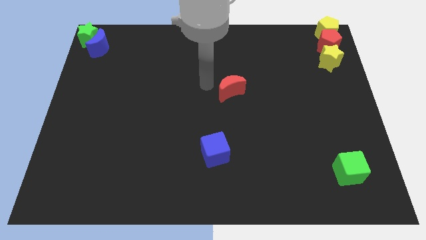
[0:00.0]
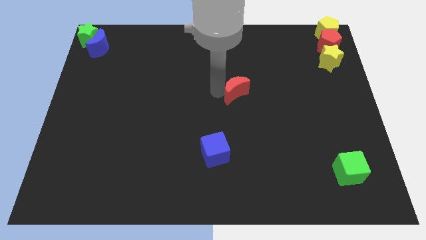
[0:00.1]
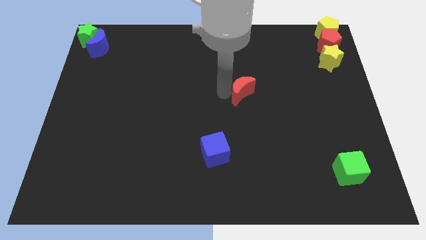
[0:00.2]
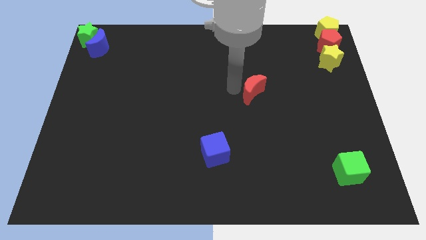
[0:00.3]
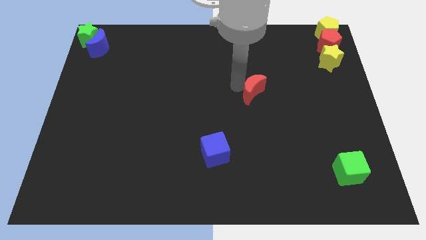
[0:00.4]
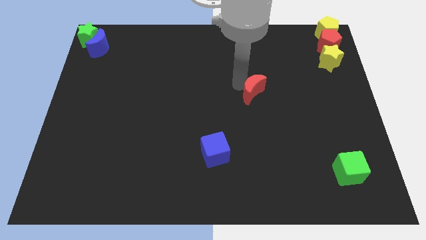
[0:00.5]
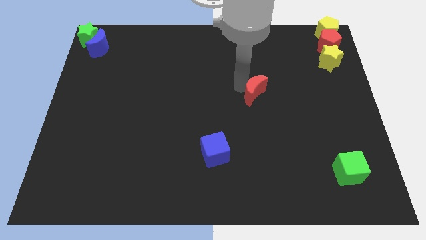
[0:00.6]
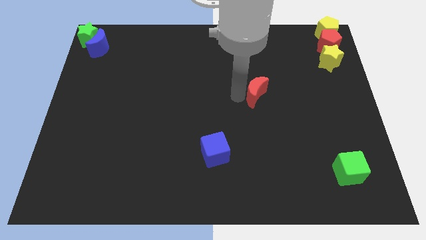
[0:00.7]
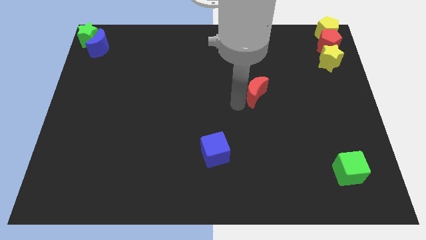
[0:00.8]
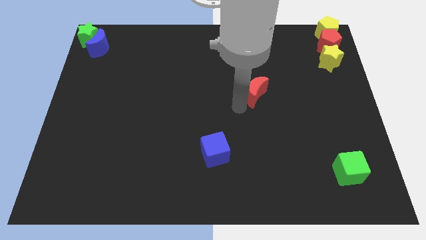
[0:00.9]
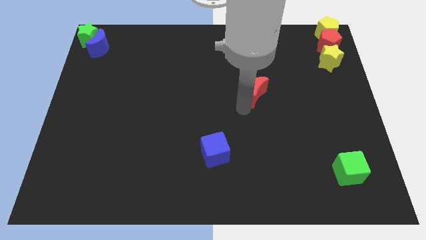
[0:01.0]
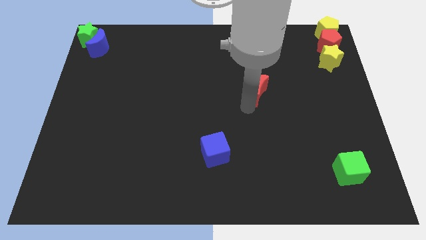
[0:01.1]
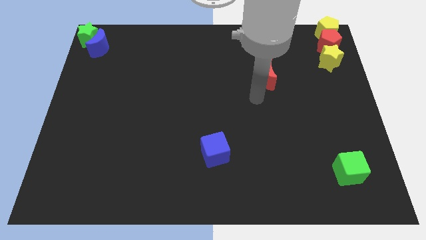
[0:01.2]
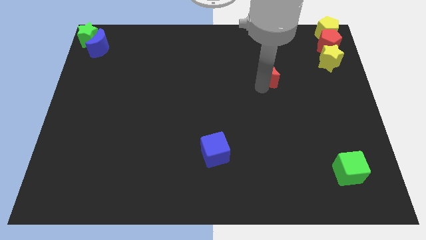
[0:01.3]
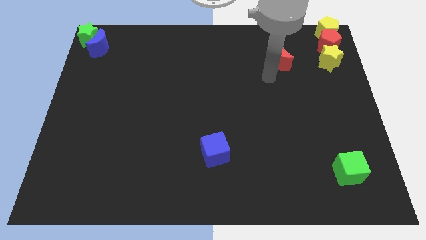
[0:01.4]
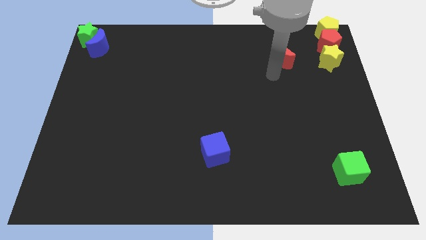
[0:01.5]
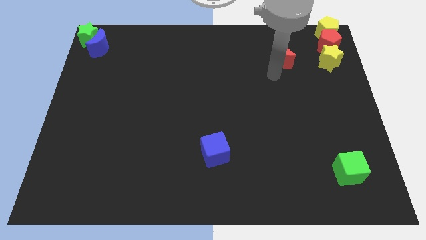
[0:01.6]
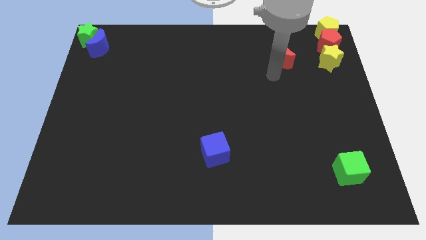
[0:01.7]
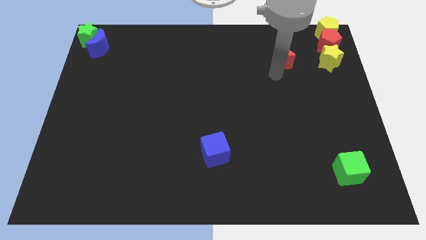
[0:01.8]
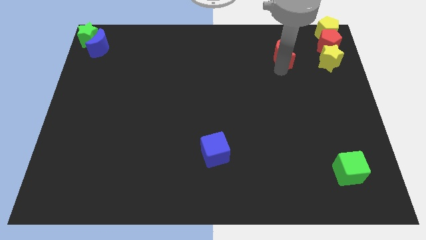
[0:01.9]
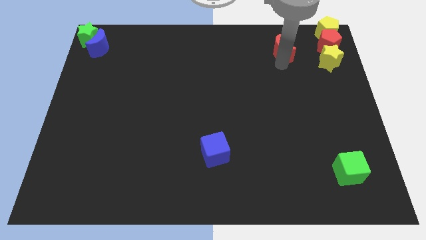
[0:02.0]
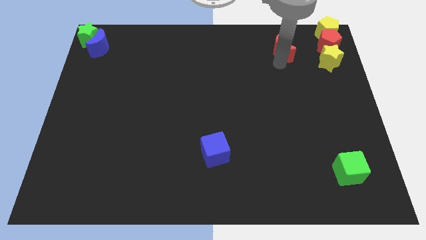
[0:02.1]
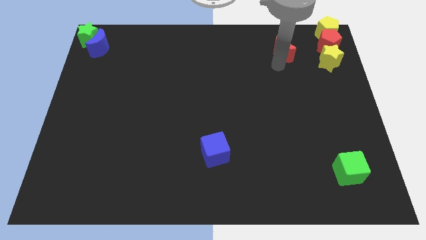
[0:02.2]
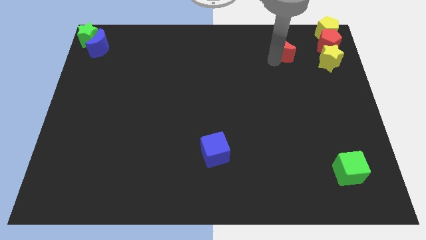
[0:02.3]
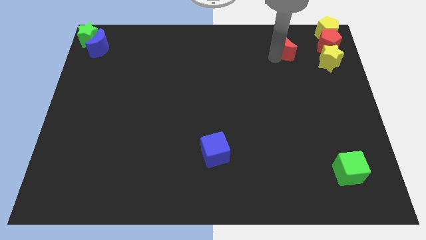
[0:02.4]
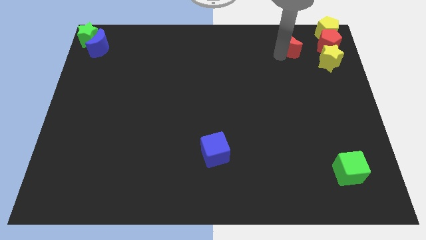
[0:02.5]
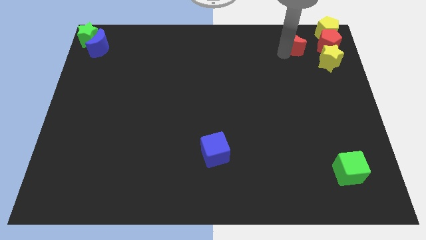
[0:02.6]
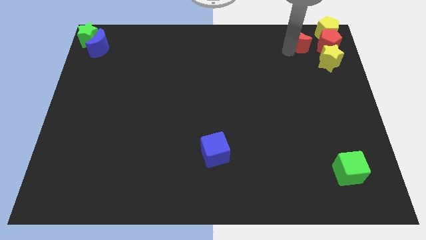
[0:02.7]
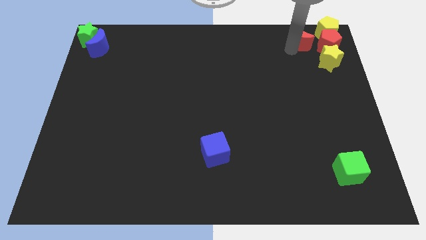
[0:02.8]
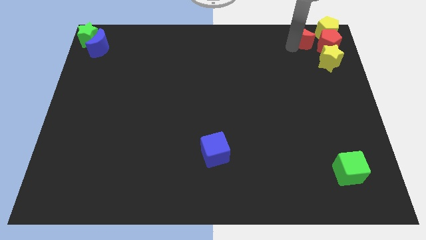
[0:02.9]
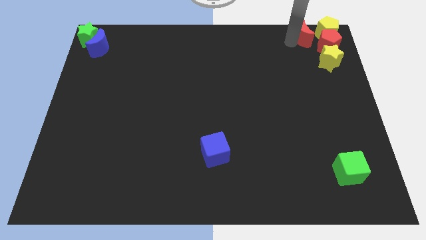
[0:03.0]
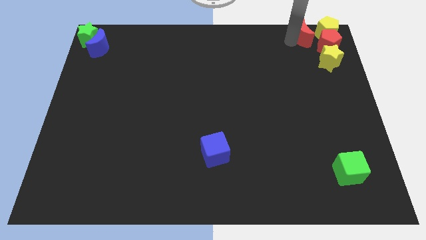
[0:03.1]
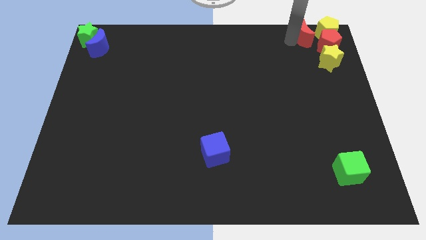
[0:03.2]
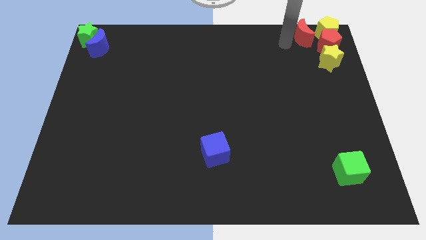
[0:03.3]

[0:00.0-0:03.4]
move the red crescent to the left of the yellow pentagon

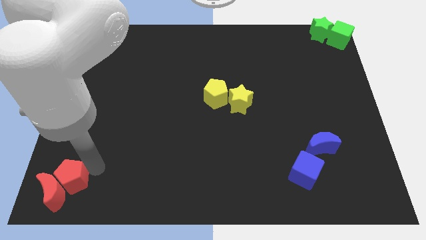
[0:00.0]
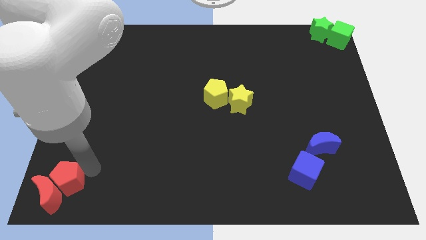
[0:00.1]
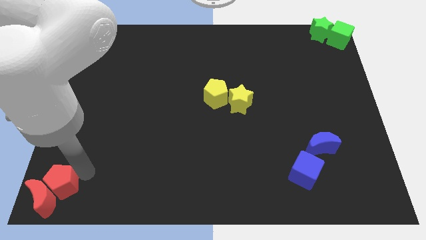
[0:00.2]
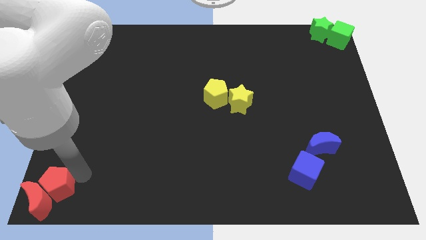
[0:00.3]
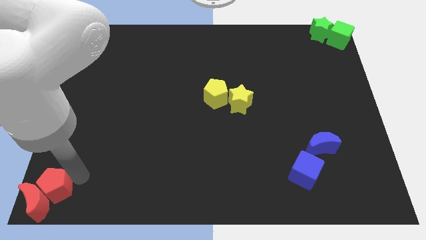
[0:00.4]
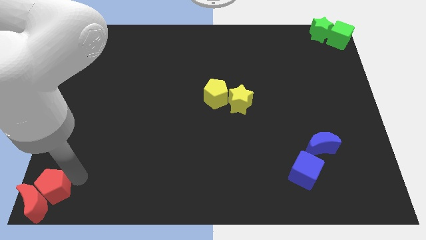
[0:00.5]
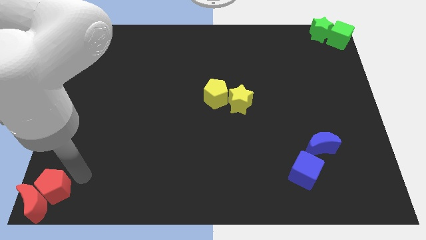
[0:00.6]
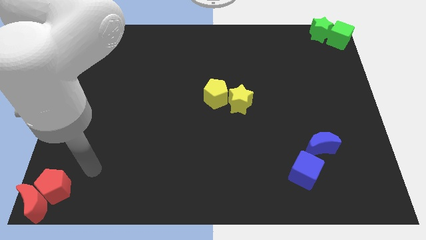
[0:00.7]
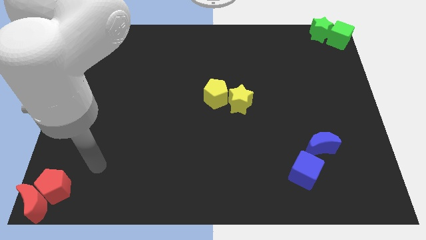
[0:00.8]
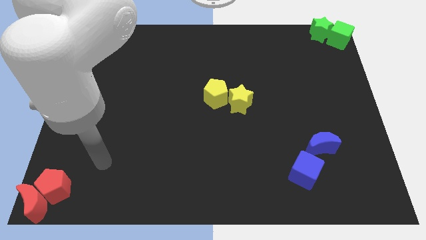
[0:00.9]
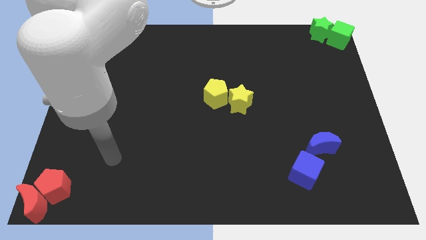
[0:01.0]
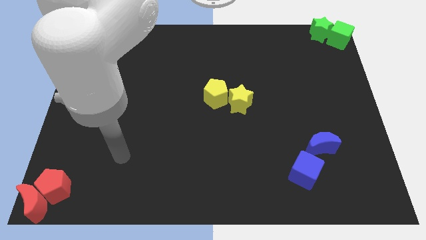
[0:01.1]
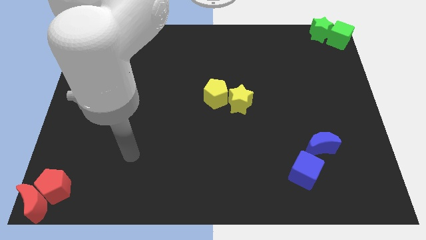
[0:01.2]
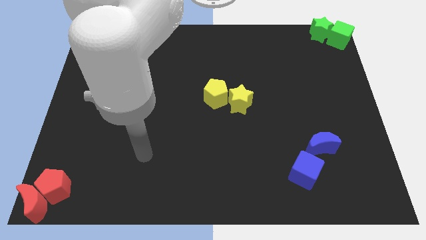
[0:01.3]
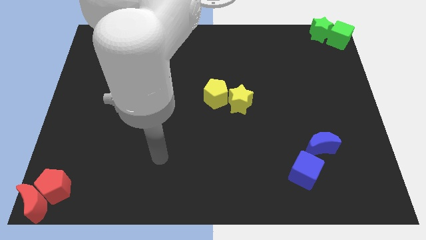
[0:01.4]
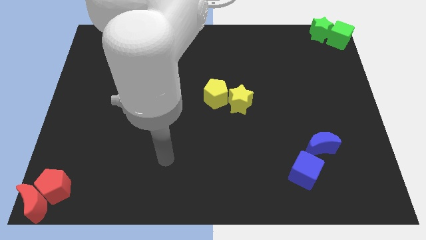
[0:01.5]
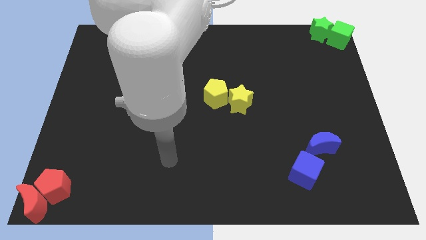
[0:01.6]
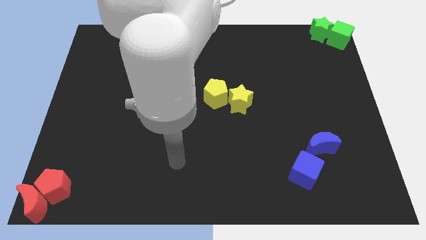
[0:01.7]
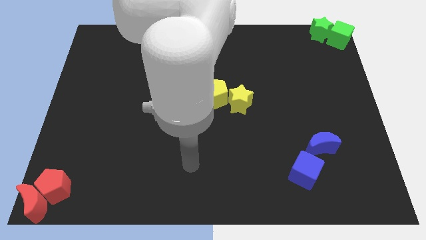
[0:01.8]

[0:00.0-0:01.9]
place the red blocks to the bottom left corner of the board

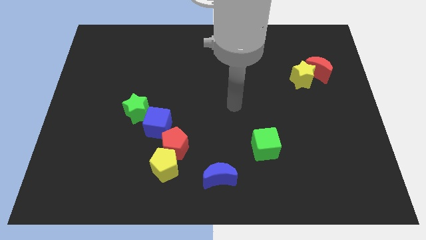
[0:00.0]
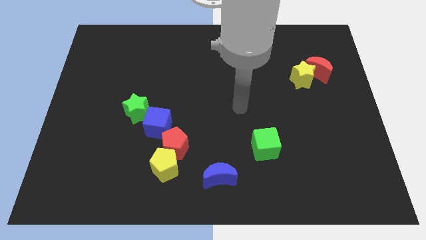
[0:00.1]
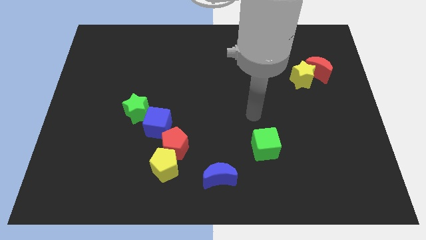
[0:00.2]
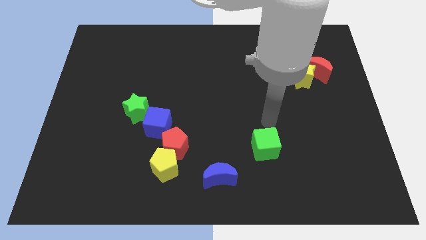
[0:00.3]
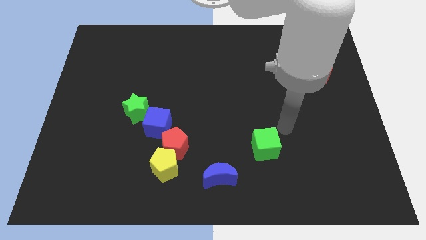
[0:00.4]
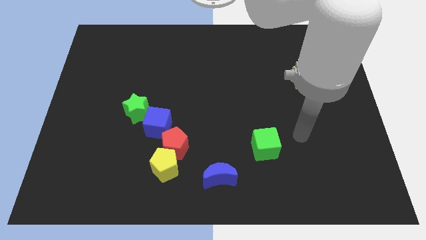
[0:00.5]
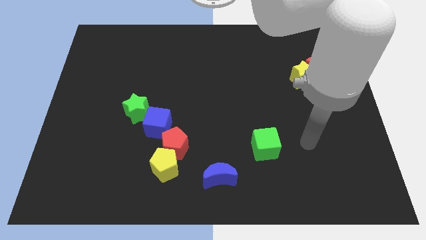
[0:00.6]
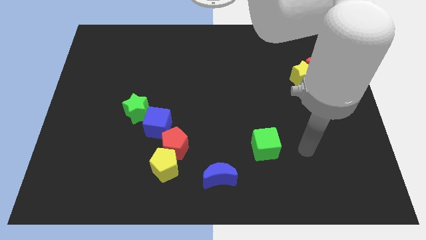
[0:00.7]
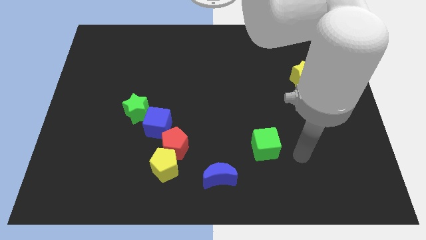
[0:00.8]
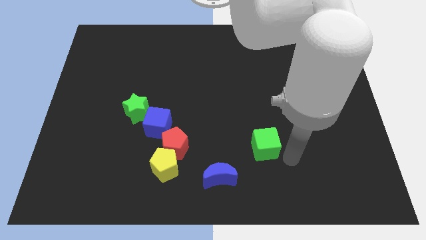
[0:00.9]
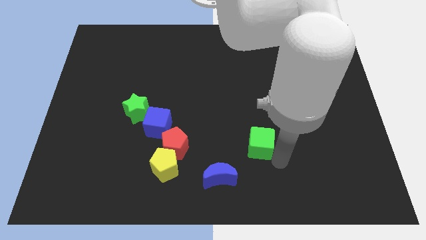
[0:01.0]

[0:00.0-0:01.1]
move the arm diagonal to the green cube

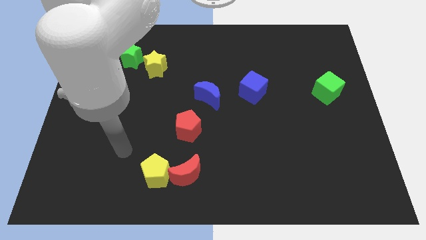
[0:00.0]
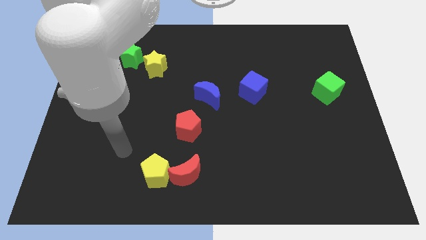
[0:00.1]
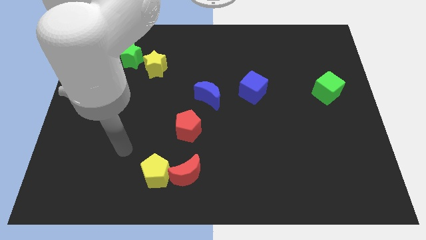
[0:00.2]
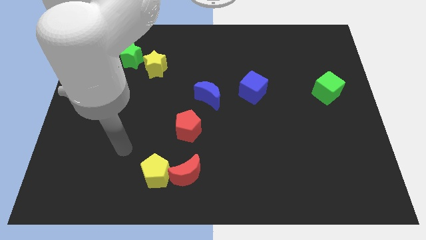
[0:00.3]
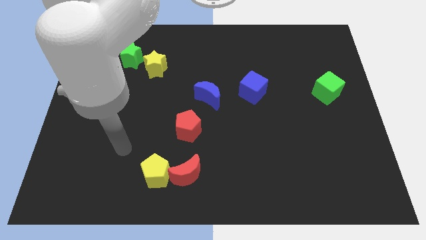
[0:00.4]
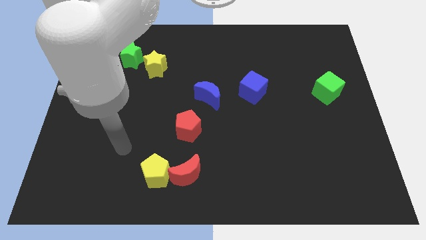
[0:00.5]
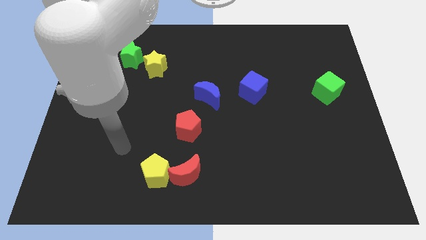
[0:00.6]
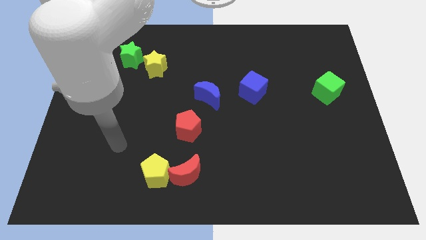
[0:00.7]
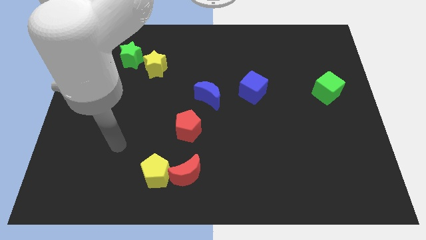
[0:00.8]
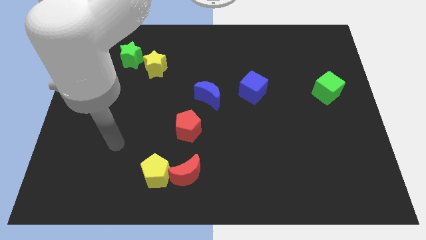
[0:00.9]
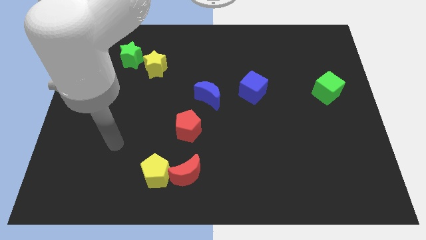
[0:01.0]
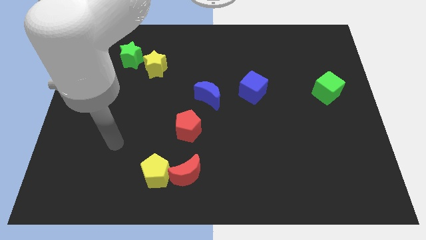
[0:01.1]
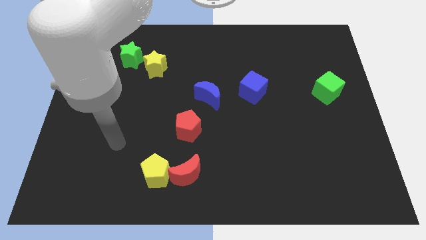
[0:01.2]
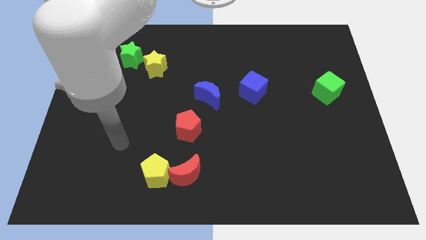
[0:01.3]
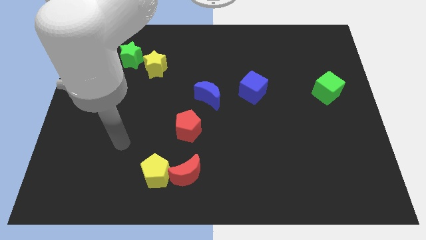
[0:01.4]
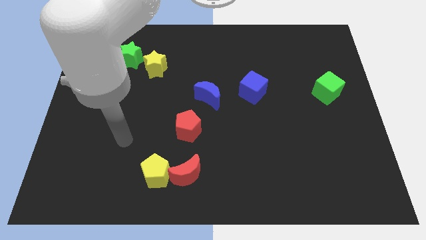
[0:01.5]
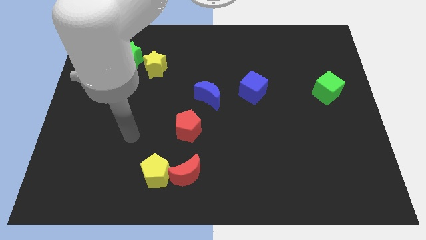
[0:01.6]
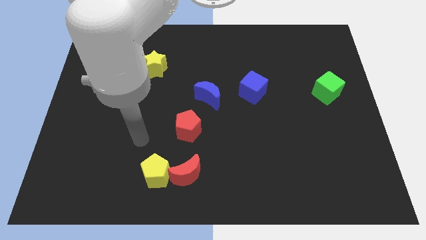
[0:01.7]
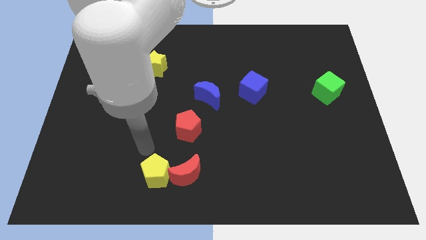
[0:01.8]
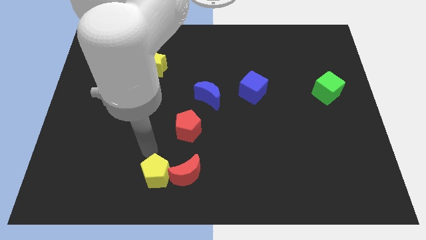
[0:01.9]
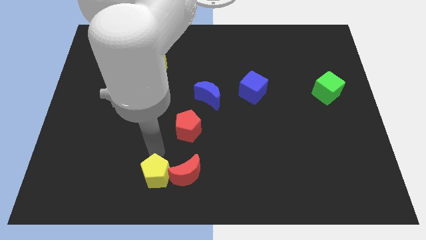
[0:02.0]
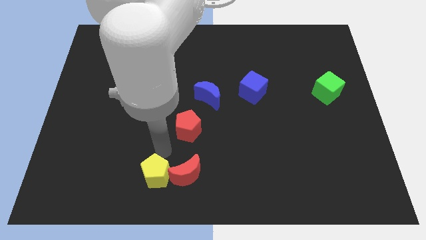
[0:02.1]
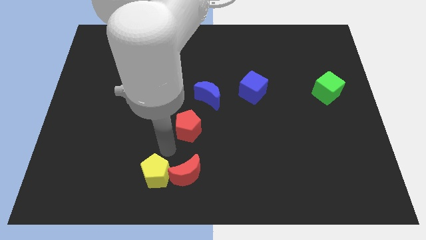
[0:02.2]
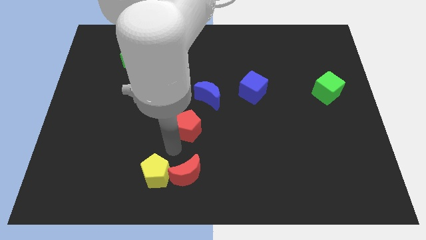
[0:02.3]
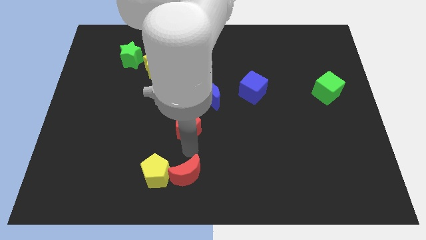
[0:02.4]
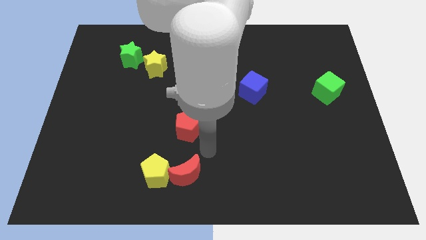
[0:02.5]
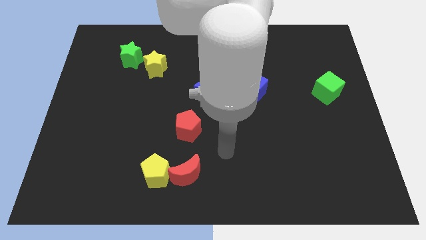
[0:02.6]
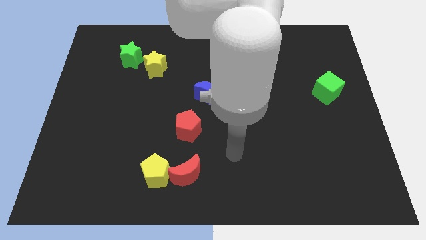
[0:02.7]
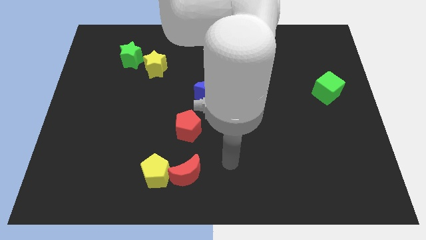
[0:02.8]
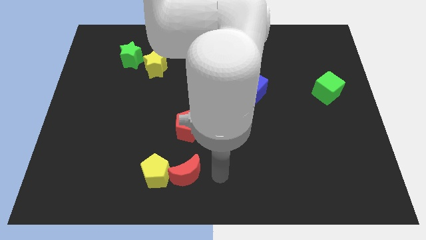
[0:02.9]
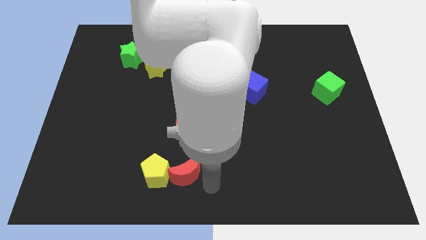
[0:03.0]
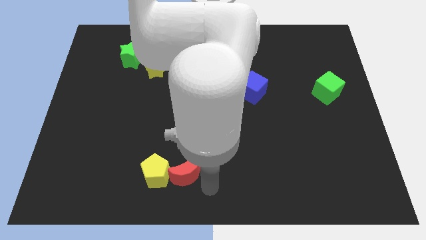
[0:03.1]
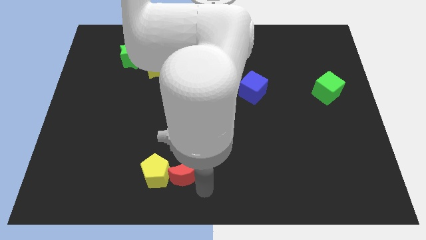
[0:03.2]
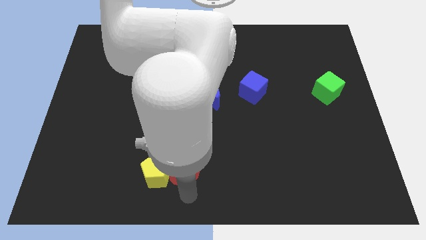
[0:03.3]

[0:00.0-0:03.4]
slightly move the red crescent below the red pentagon
